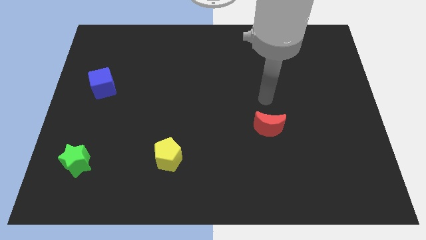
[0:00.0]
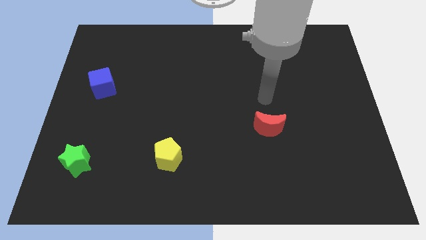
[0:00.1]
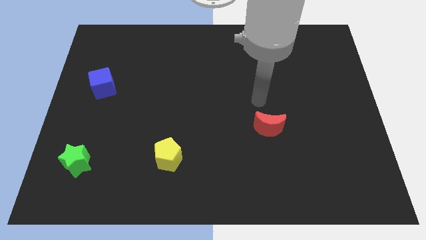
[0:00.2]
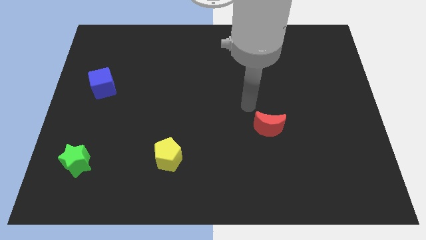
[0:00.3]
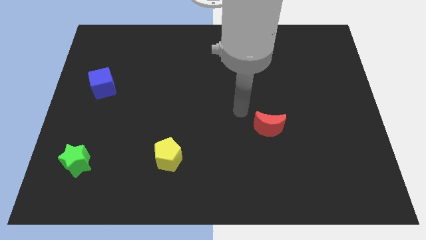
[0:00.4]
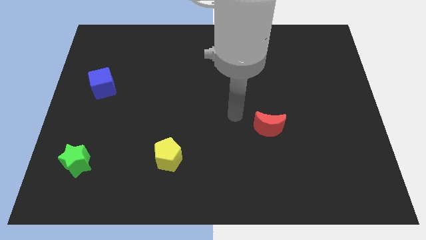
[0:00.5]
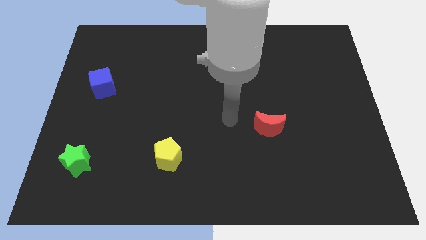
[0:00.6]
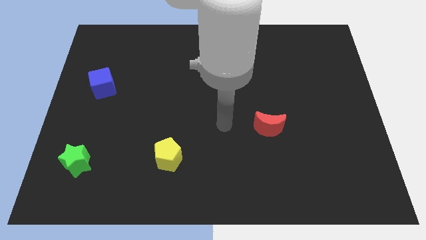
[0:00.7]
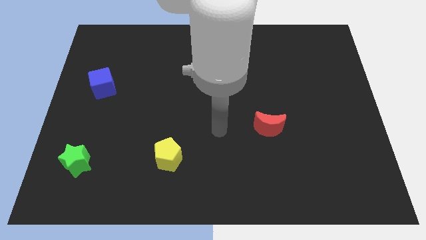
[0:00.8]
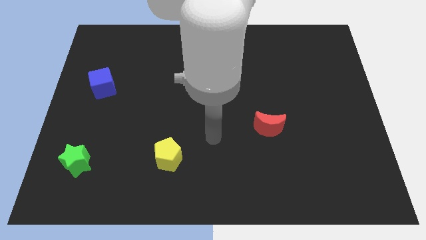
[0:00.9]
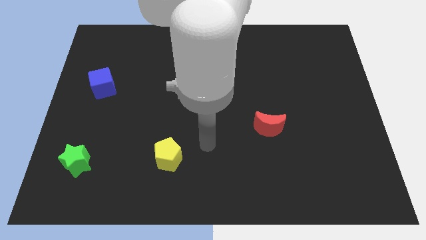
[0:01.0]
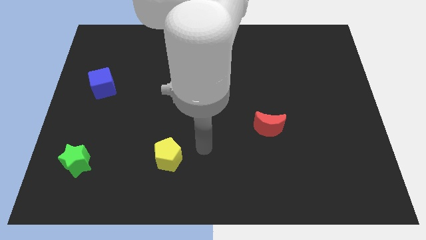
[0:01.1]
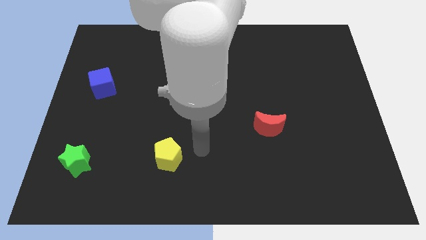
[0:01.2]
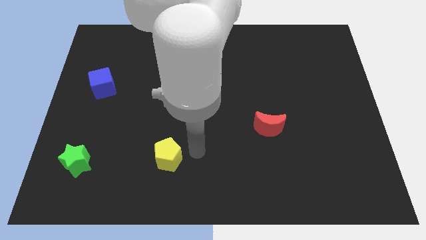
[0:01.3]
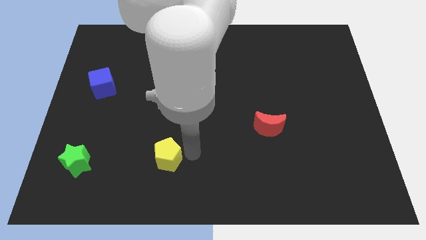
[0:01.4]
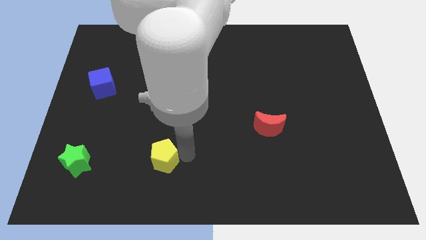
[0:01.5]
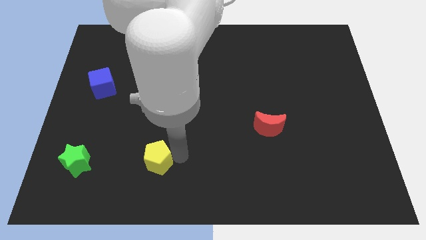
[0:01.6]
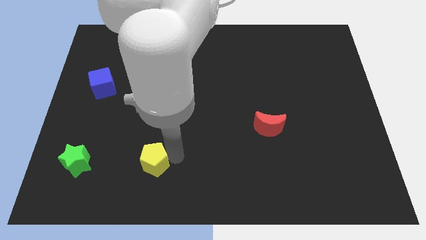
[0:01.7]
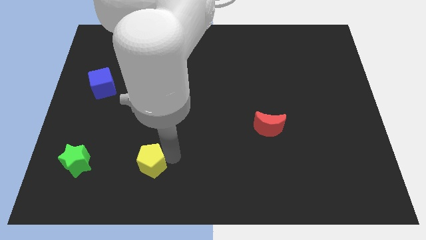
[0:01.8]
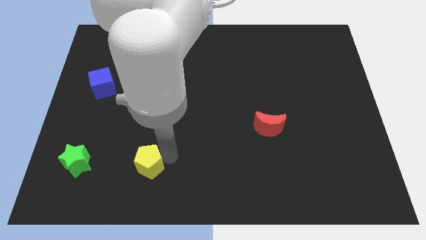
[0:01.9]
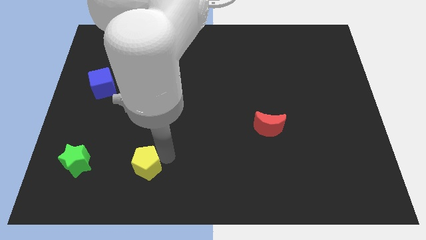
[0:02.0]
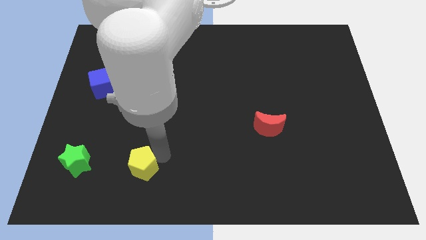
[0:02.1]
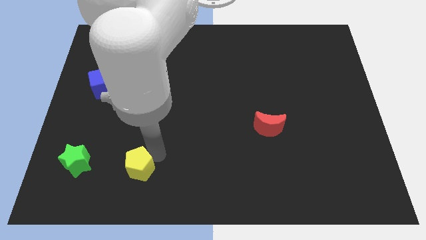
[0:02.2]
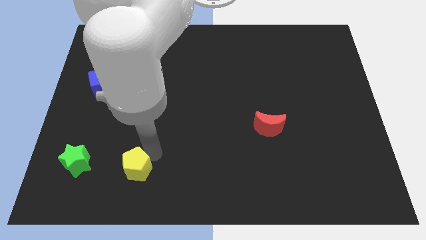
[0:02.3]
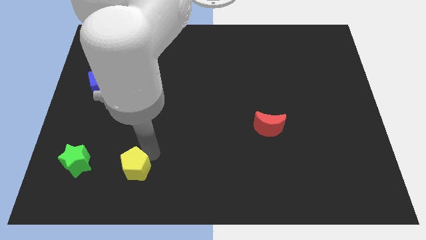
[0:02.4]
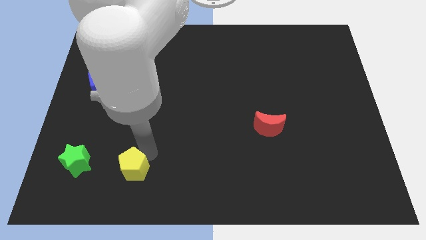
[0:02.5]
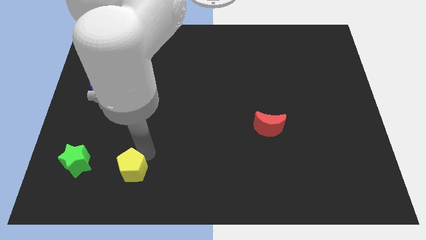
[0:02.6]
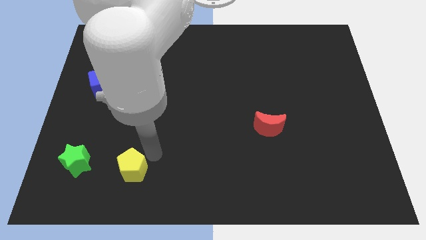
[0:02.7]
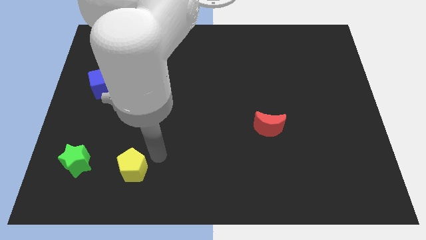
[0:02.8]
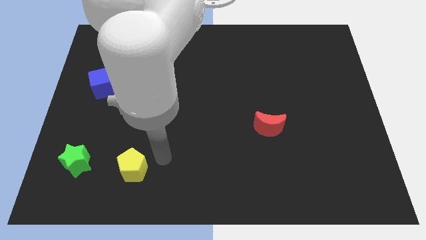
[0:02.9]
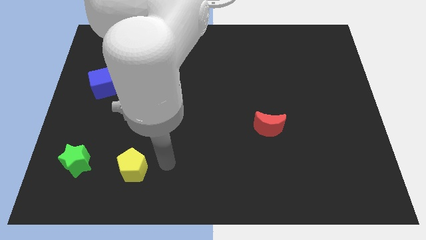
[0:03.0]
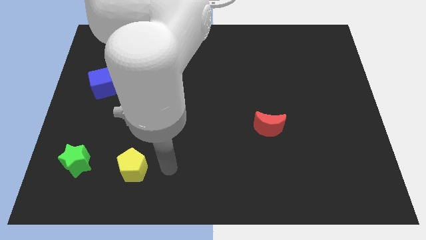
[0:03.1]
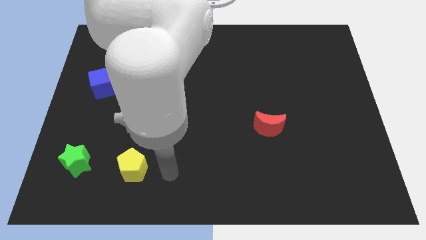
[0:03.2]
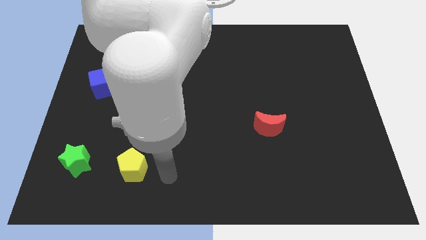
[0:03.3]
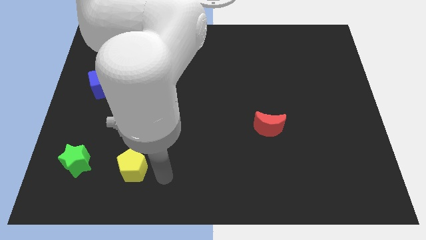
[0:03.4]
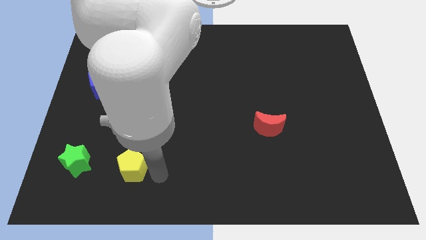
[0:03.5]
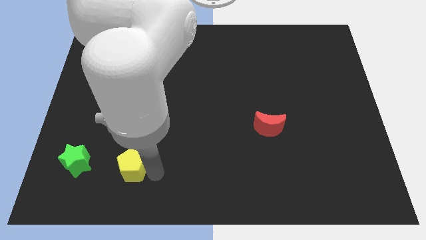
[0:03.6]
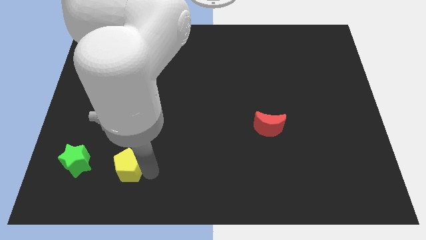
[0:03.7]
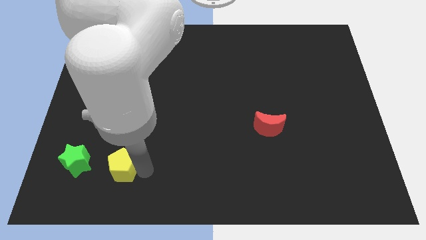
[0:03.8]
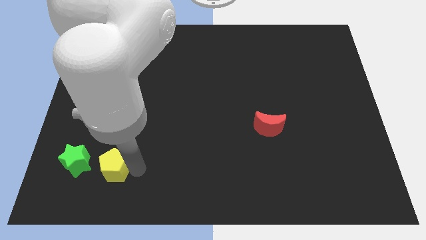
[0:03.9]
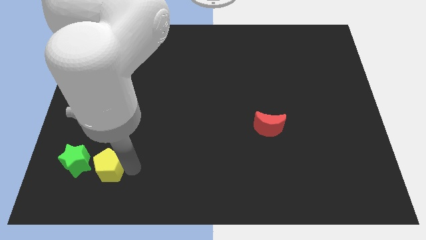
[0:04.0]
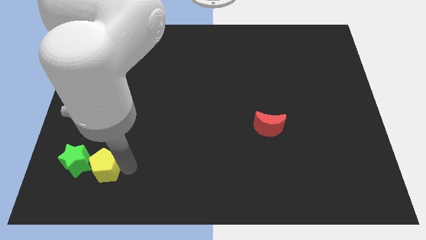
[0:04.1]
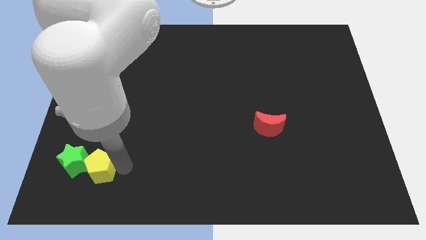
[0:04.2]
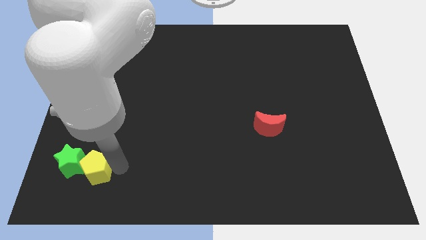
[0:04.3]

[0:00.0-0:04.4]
push the pentagon towards the green block

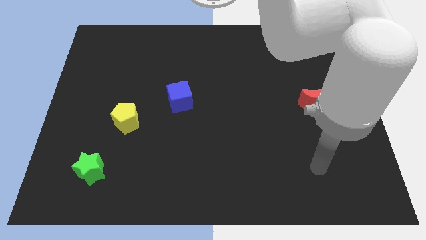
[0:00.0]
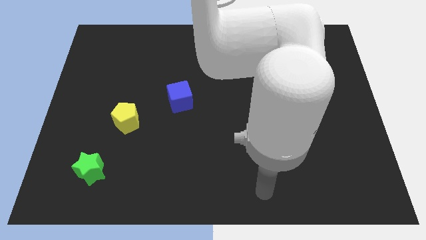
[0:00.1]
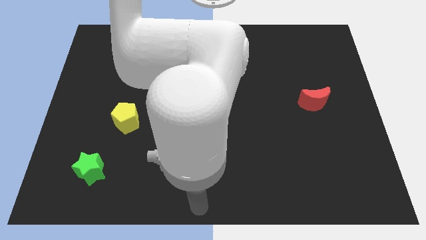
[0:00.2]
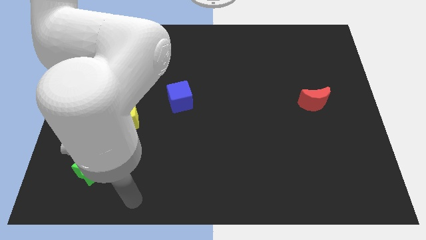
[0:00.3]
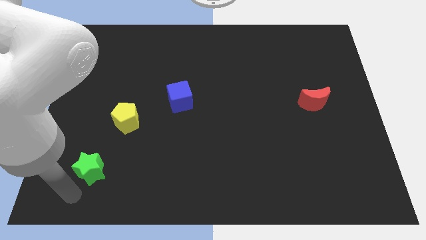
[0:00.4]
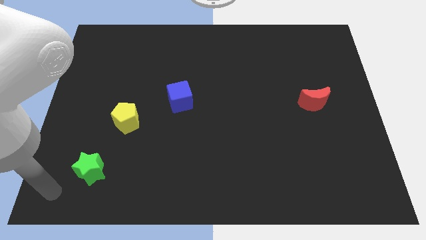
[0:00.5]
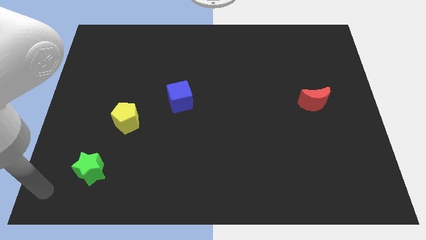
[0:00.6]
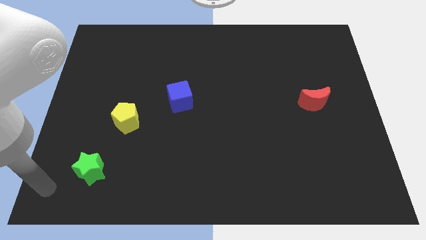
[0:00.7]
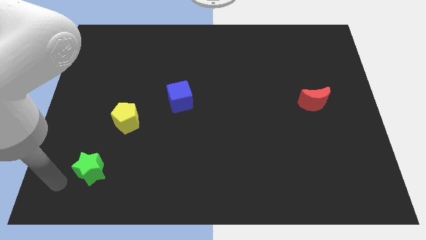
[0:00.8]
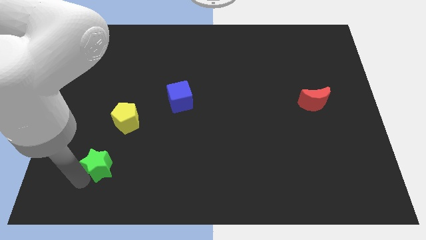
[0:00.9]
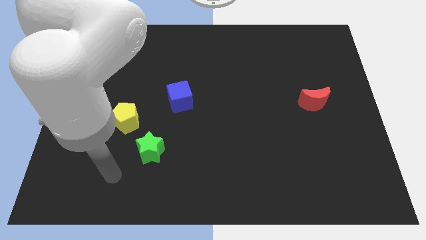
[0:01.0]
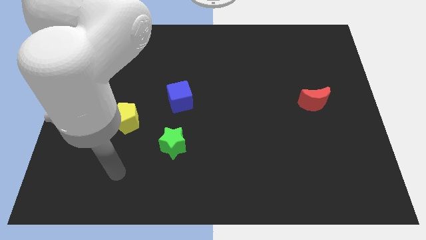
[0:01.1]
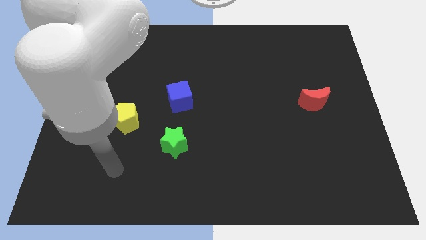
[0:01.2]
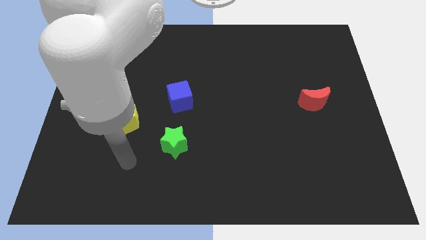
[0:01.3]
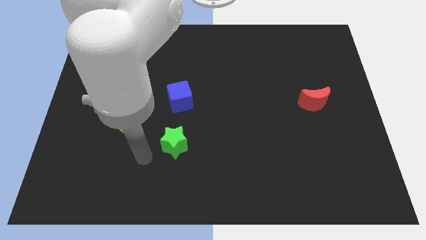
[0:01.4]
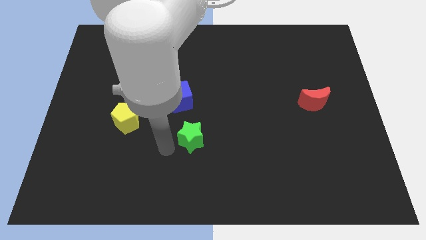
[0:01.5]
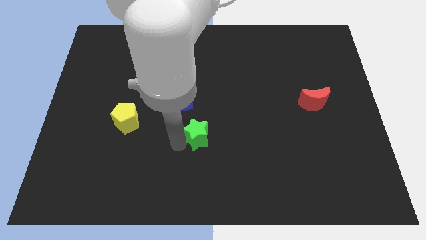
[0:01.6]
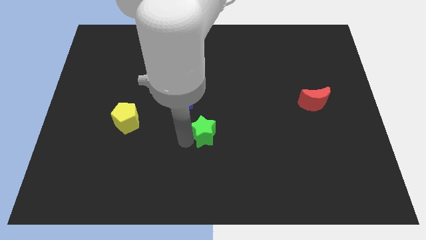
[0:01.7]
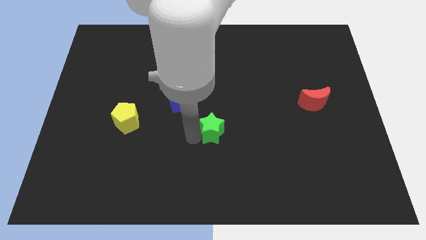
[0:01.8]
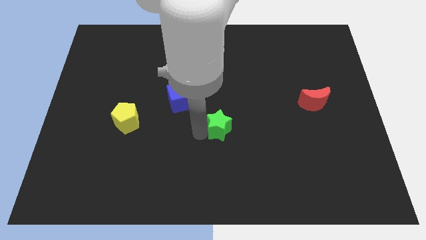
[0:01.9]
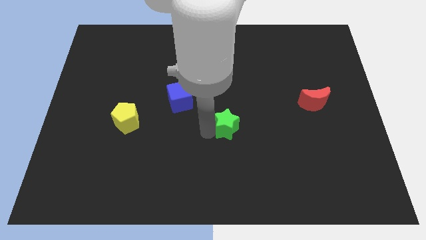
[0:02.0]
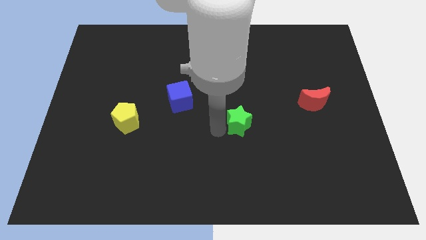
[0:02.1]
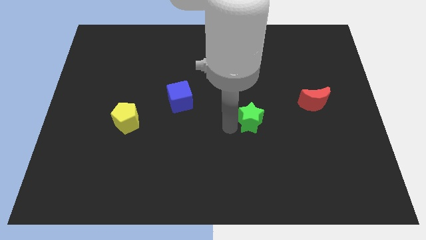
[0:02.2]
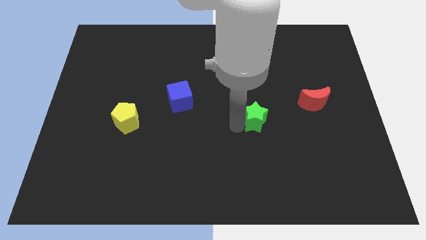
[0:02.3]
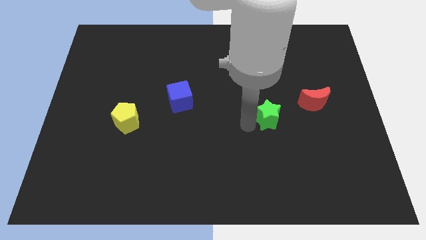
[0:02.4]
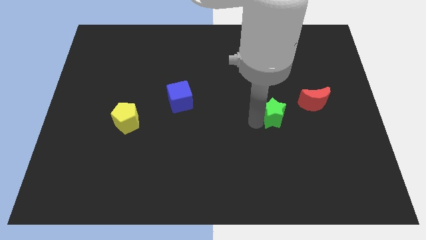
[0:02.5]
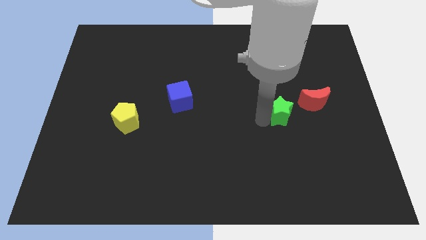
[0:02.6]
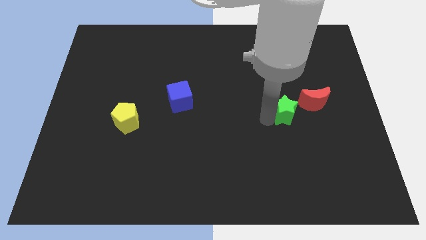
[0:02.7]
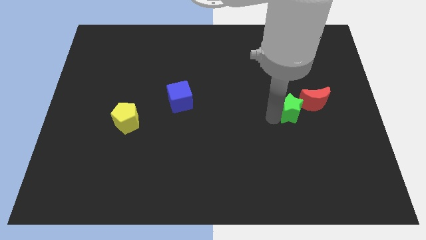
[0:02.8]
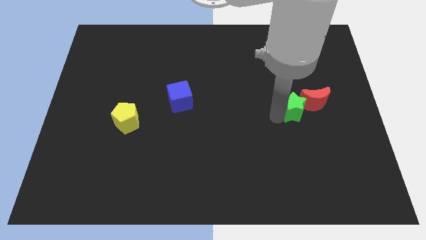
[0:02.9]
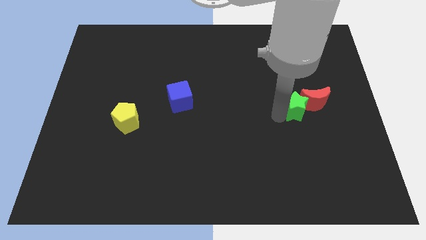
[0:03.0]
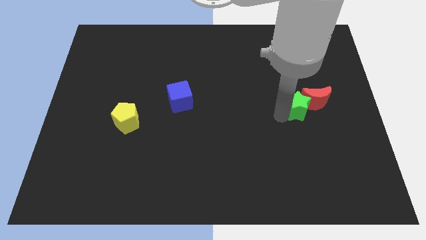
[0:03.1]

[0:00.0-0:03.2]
move the star close to the red moon

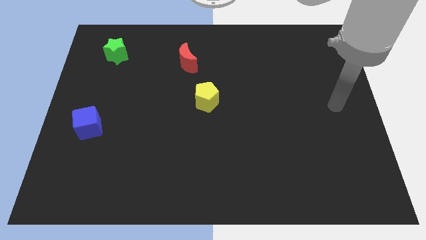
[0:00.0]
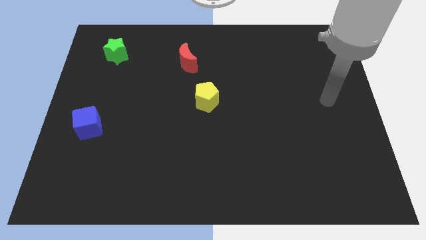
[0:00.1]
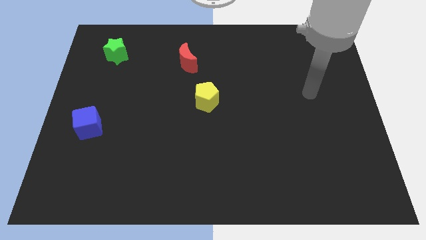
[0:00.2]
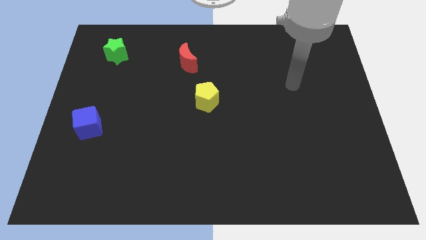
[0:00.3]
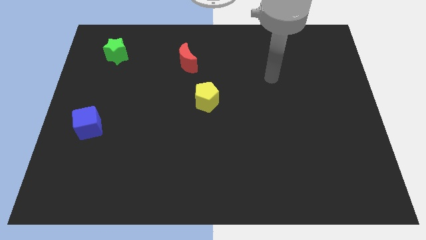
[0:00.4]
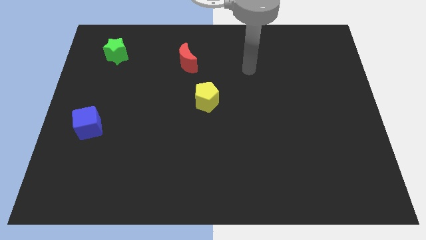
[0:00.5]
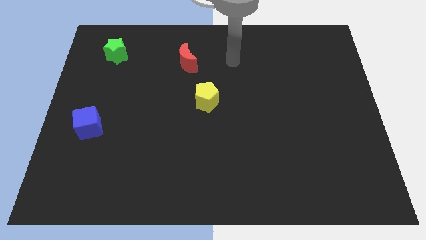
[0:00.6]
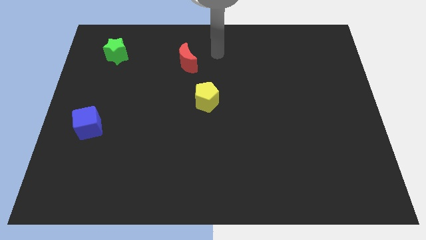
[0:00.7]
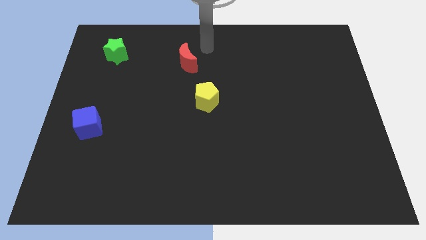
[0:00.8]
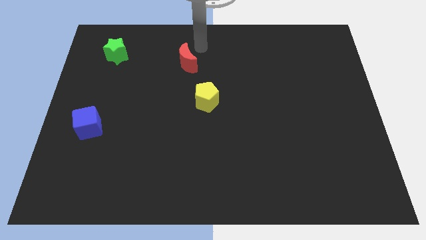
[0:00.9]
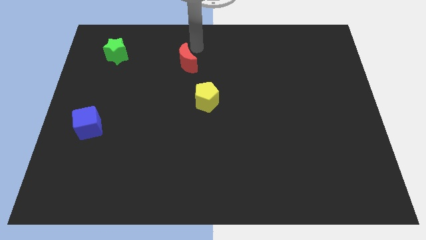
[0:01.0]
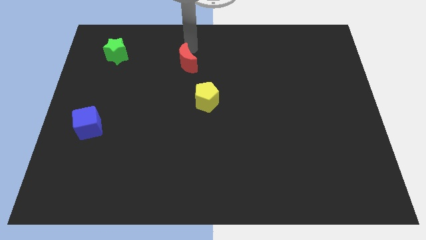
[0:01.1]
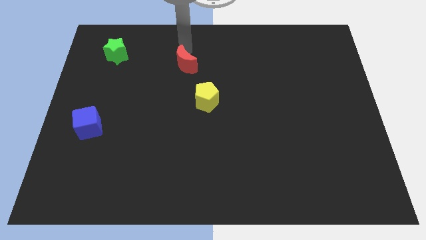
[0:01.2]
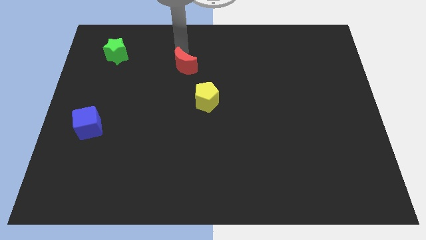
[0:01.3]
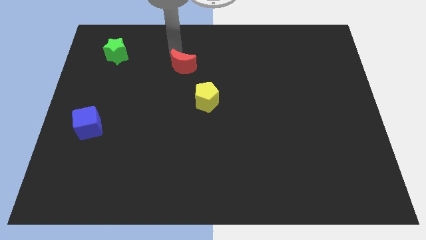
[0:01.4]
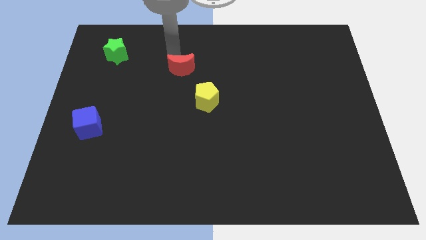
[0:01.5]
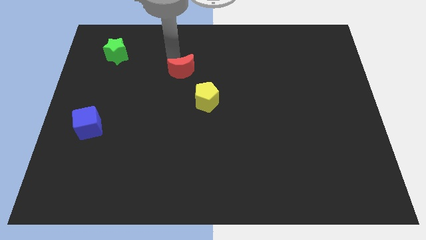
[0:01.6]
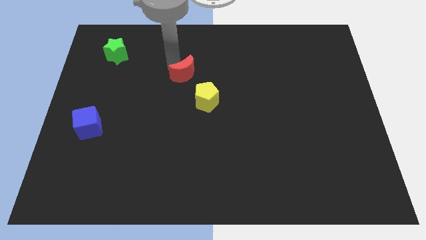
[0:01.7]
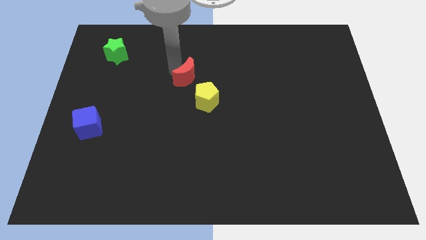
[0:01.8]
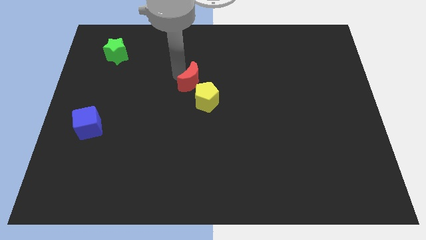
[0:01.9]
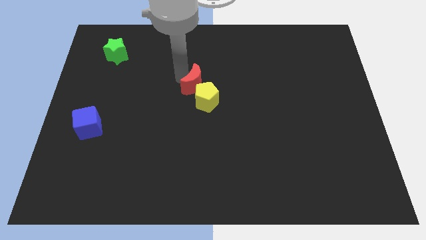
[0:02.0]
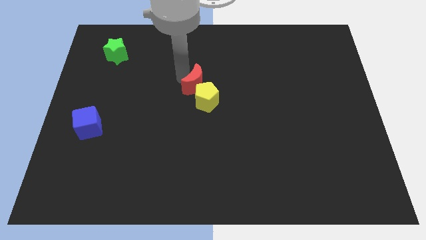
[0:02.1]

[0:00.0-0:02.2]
push the red block towards the yellow block
